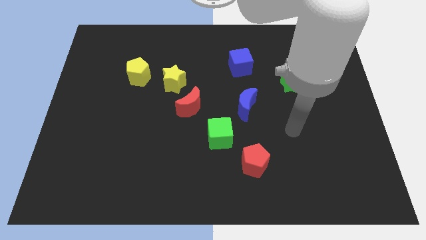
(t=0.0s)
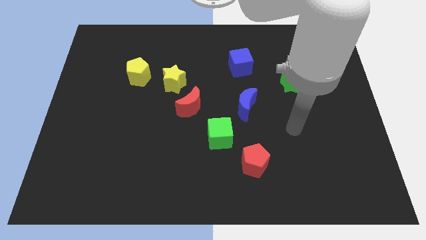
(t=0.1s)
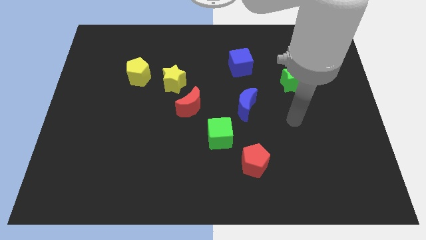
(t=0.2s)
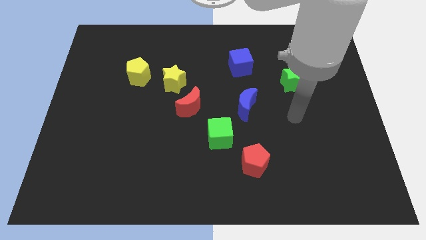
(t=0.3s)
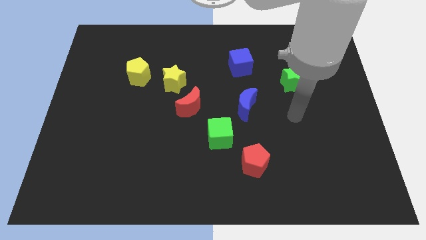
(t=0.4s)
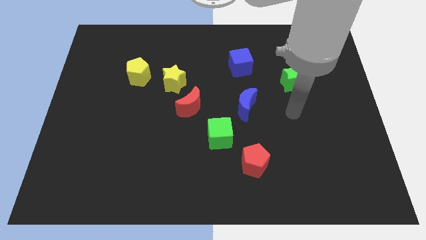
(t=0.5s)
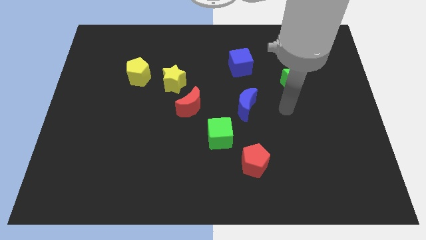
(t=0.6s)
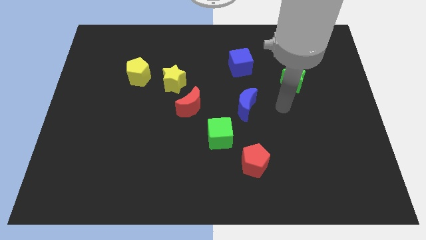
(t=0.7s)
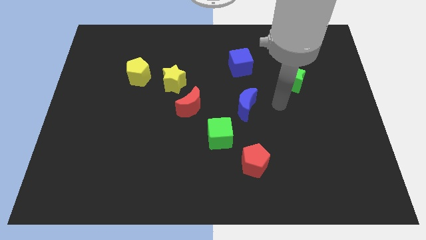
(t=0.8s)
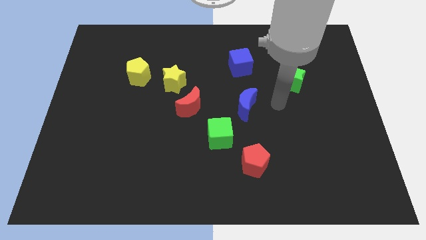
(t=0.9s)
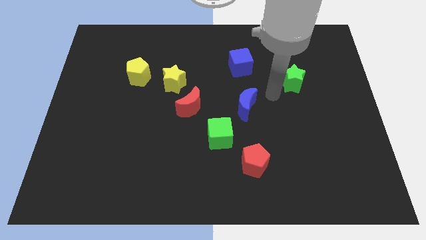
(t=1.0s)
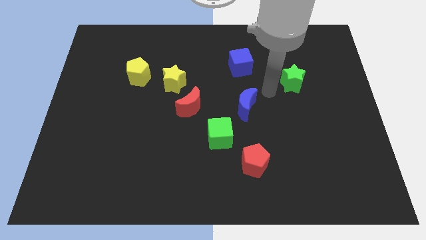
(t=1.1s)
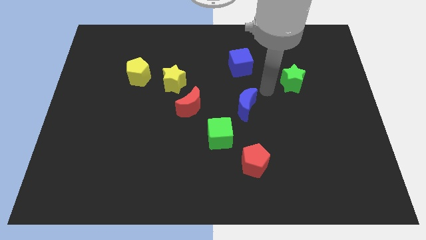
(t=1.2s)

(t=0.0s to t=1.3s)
place arm in between blue moon and green star

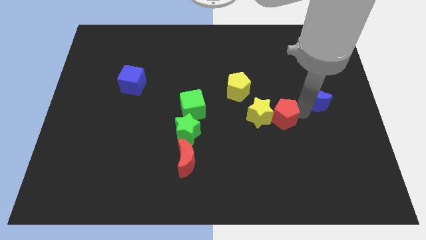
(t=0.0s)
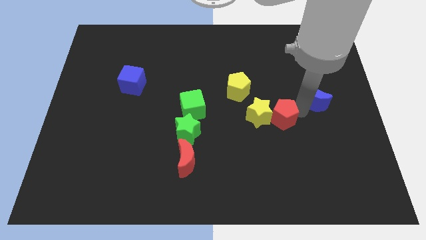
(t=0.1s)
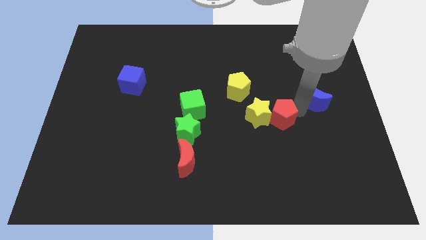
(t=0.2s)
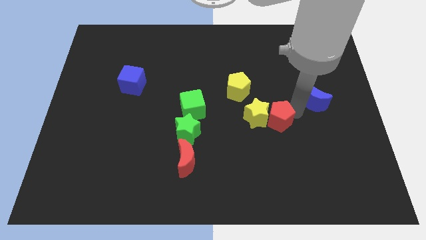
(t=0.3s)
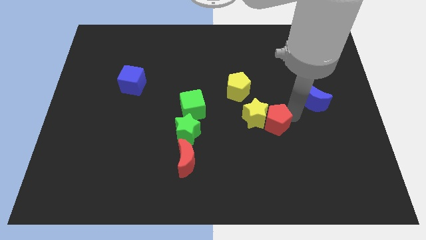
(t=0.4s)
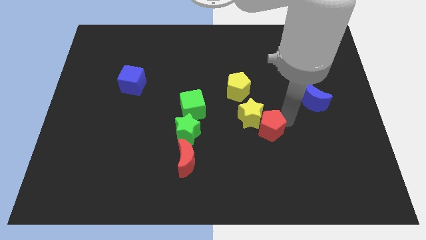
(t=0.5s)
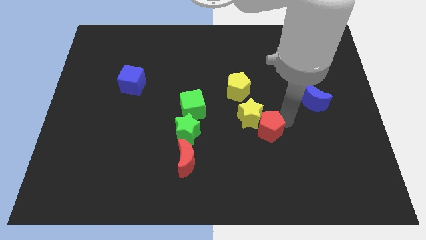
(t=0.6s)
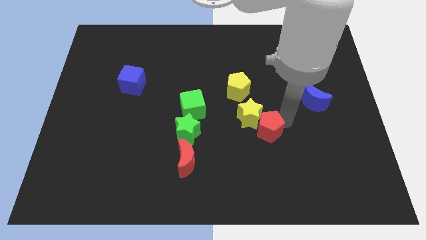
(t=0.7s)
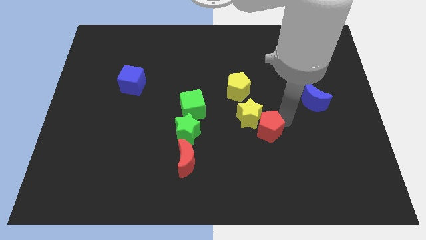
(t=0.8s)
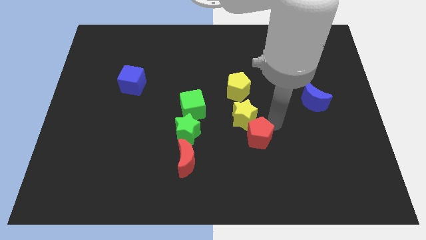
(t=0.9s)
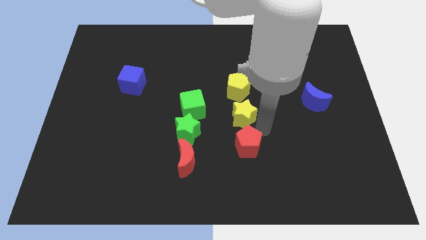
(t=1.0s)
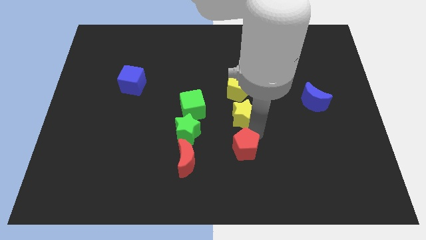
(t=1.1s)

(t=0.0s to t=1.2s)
move red pentagon below yellow star

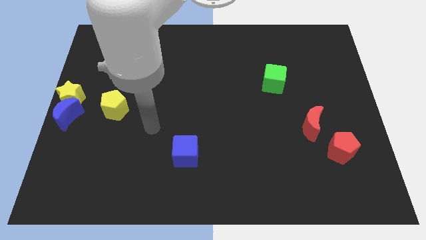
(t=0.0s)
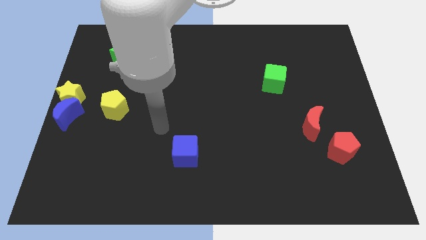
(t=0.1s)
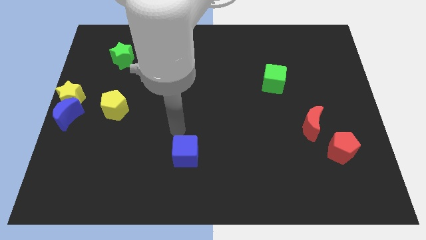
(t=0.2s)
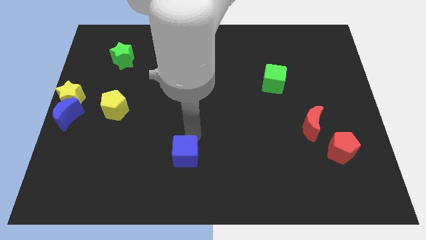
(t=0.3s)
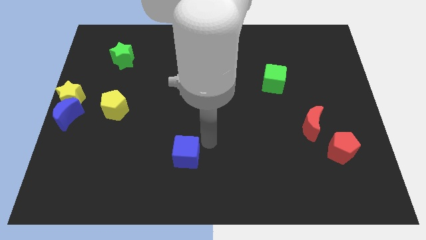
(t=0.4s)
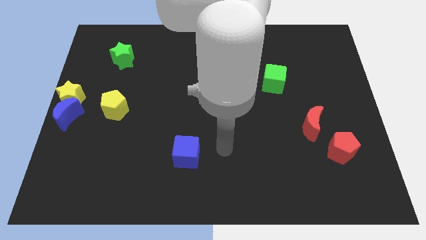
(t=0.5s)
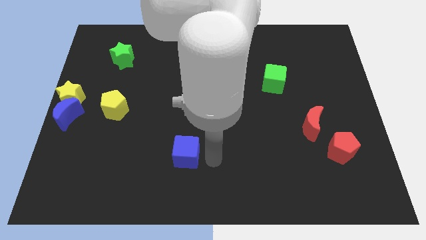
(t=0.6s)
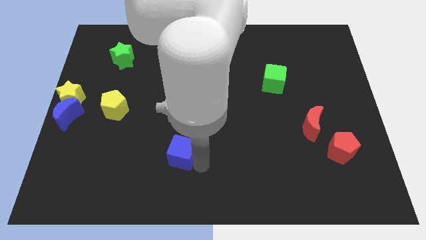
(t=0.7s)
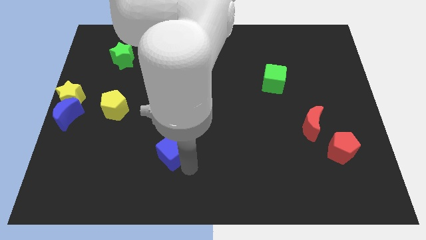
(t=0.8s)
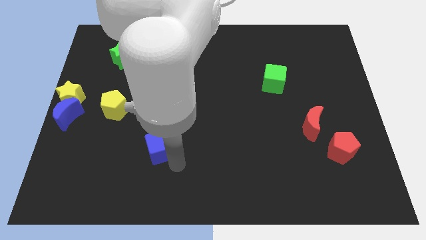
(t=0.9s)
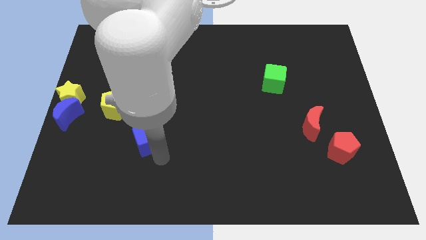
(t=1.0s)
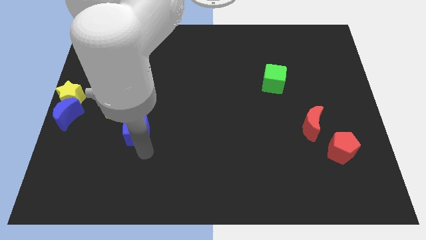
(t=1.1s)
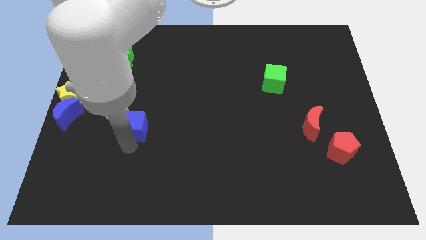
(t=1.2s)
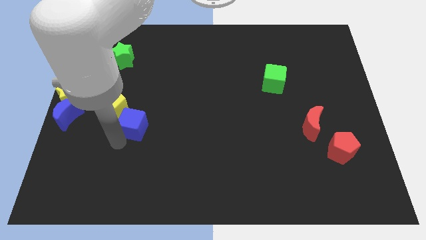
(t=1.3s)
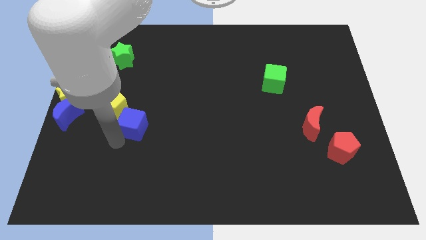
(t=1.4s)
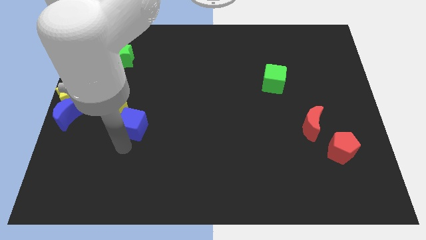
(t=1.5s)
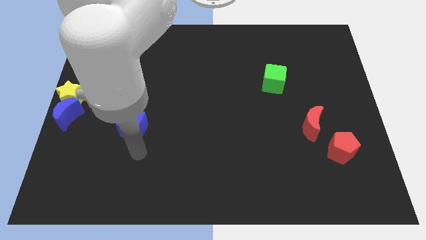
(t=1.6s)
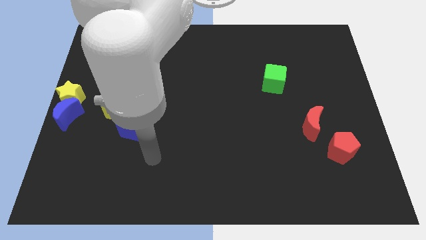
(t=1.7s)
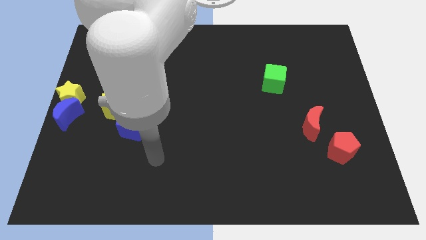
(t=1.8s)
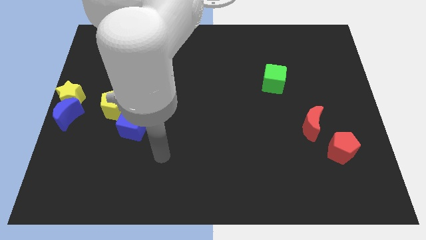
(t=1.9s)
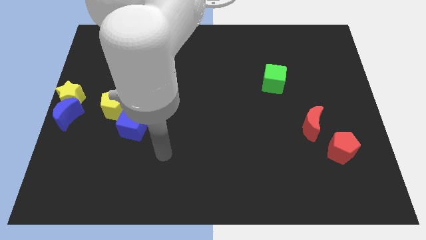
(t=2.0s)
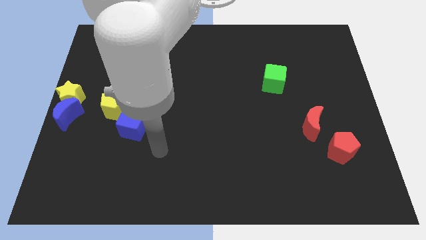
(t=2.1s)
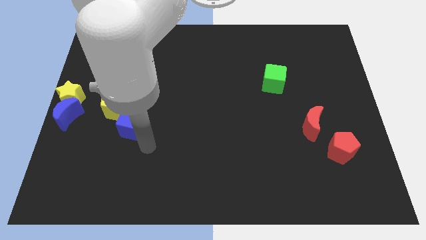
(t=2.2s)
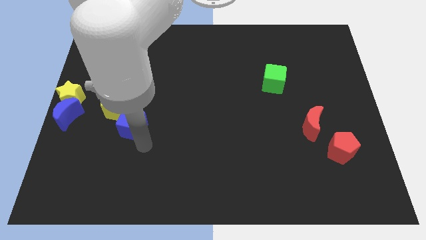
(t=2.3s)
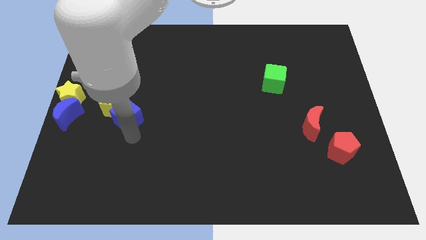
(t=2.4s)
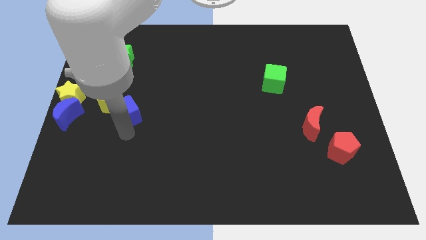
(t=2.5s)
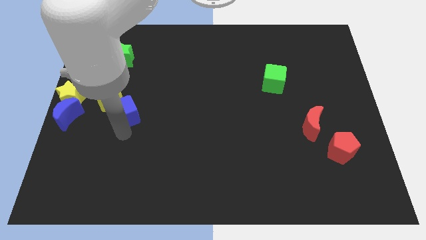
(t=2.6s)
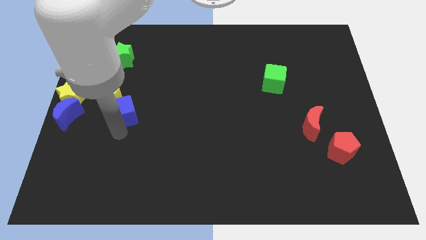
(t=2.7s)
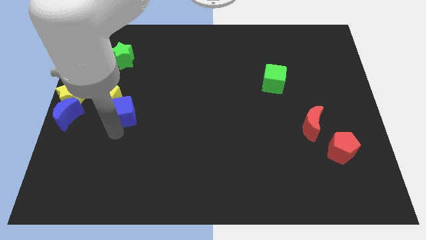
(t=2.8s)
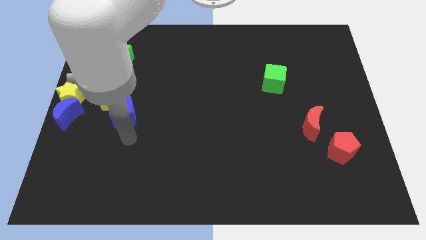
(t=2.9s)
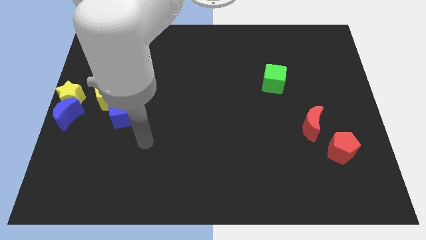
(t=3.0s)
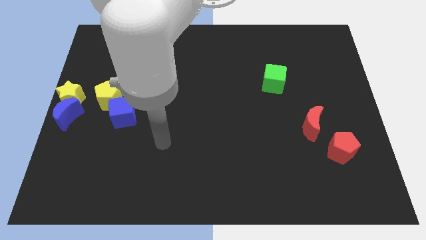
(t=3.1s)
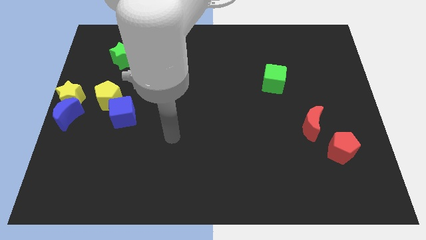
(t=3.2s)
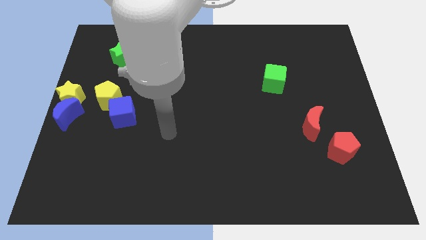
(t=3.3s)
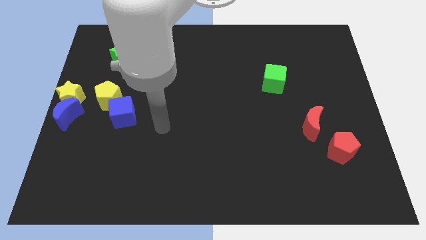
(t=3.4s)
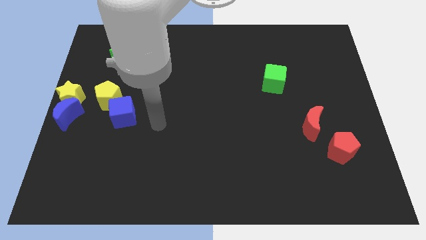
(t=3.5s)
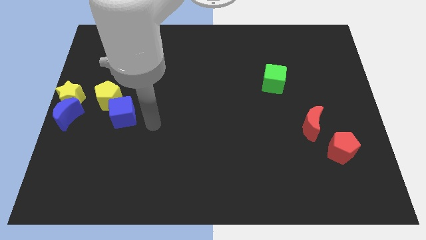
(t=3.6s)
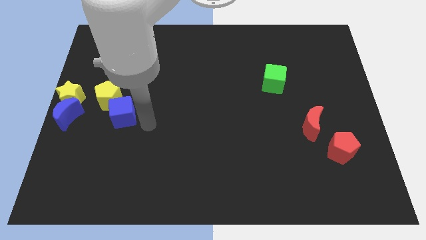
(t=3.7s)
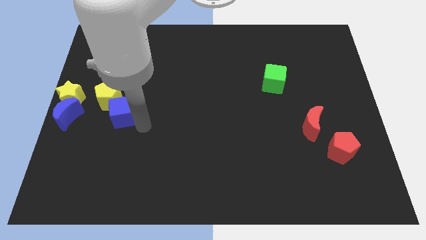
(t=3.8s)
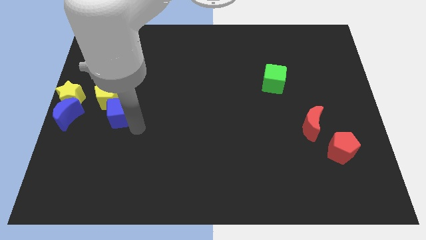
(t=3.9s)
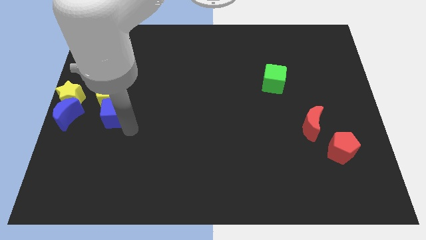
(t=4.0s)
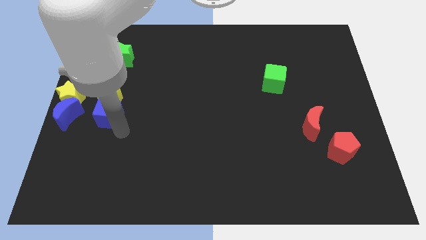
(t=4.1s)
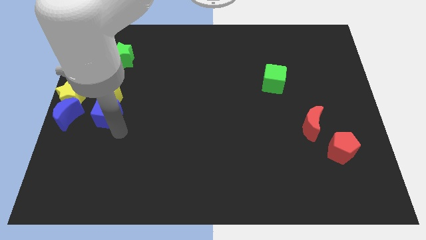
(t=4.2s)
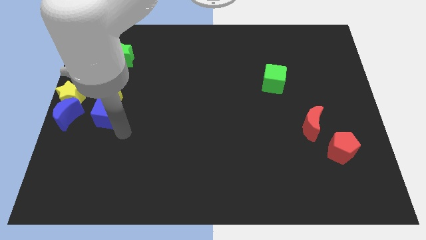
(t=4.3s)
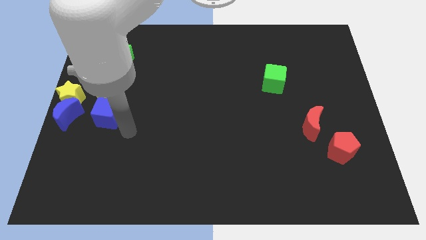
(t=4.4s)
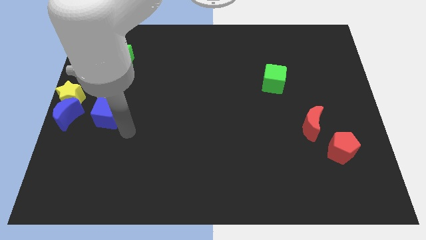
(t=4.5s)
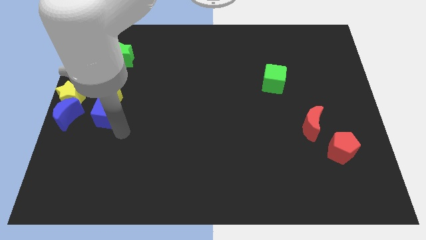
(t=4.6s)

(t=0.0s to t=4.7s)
push the blue cube into the yellow pentagon

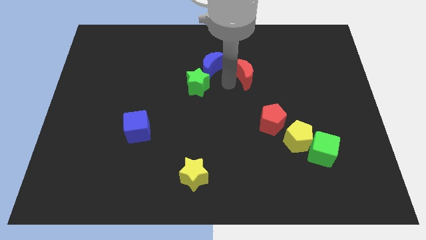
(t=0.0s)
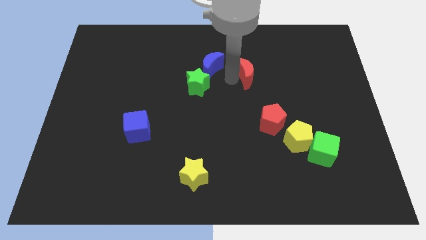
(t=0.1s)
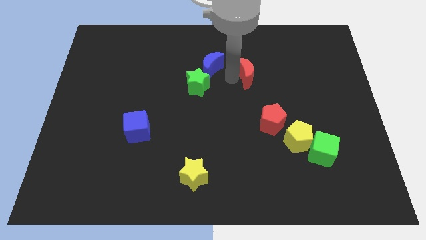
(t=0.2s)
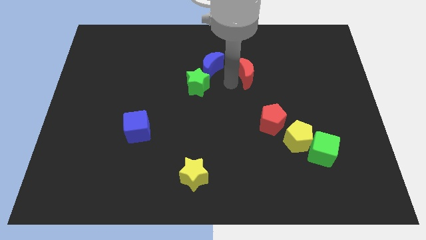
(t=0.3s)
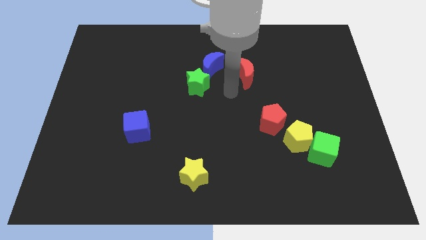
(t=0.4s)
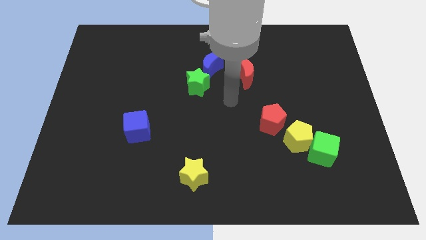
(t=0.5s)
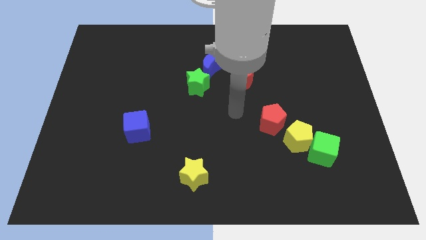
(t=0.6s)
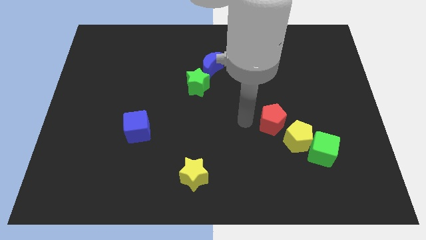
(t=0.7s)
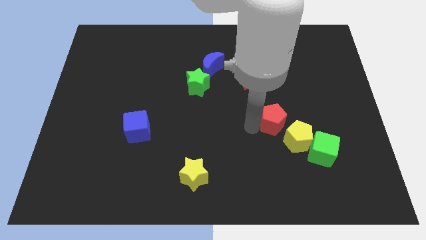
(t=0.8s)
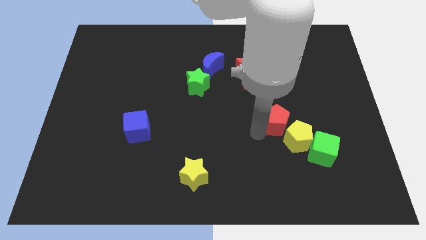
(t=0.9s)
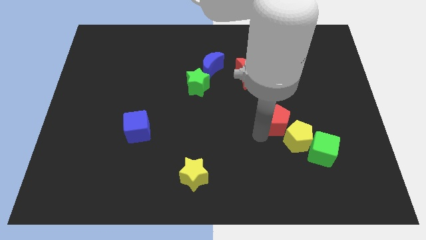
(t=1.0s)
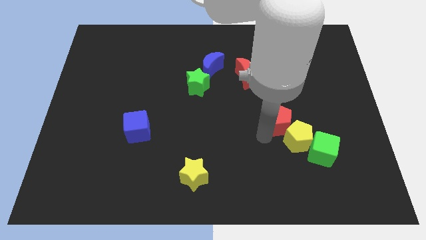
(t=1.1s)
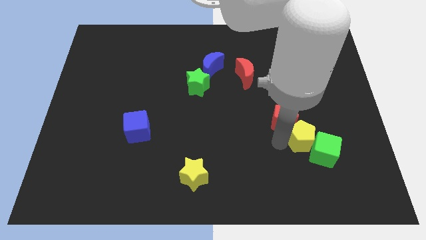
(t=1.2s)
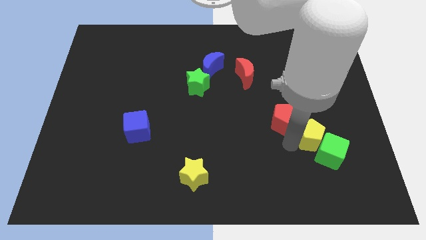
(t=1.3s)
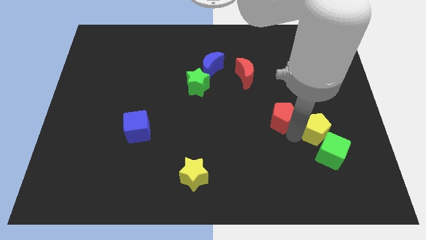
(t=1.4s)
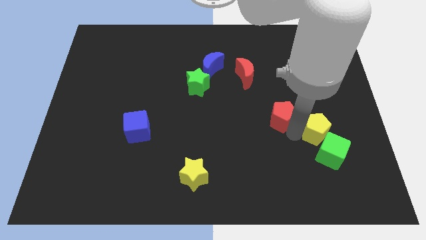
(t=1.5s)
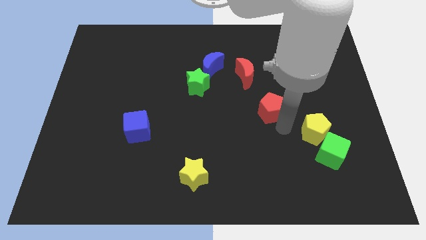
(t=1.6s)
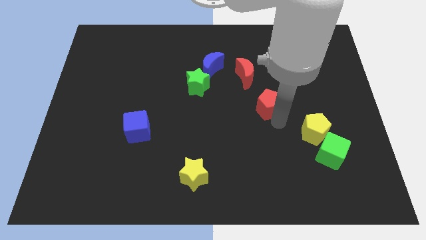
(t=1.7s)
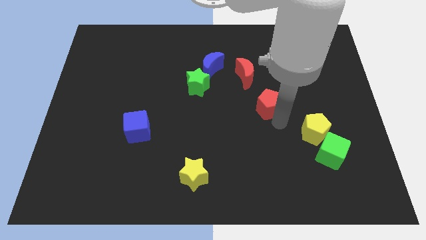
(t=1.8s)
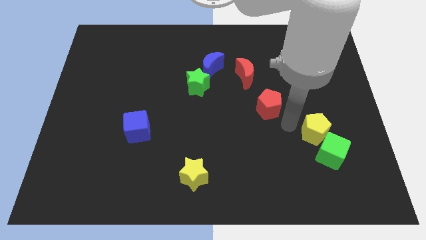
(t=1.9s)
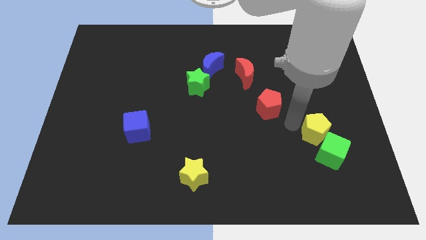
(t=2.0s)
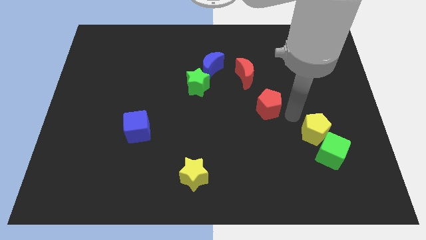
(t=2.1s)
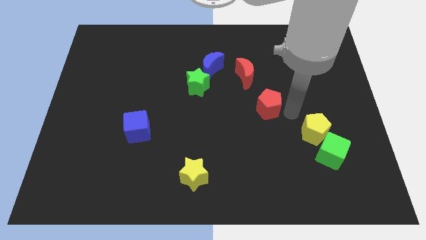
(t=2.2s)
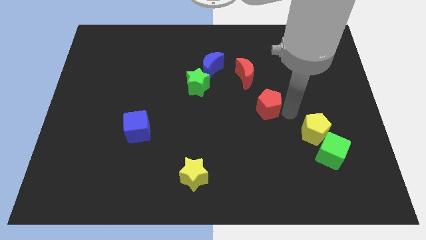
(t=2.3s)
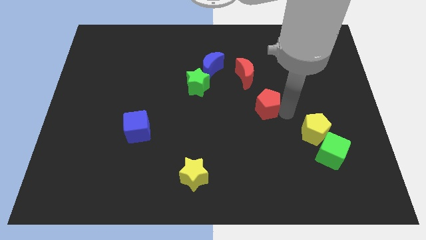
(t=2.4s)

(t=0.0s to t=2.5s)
separate the red pentagon from the yellow pentagon
